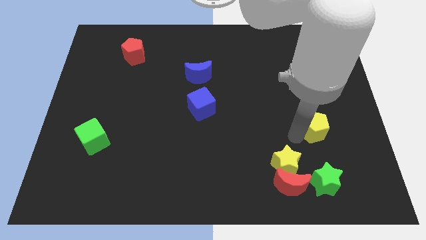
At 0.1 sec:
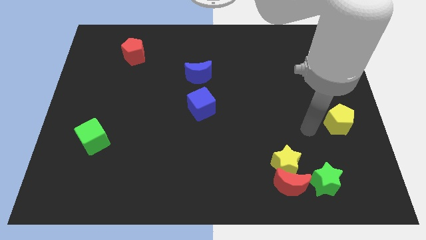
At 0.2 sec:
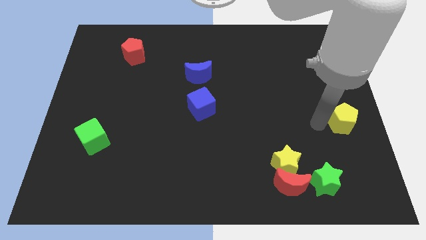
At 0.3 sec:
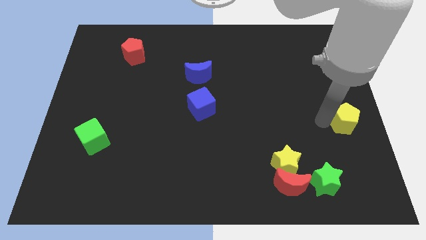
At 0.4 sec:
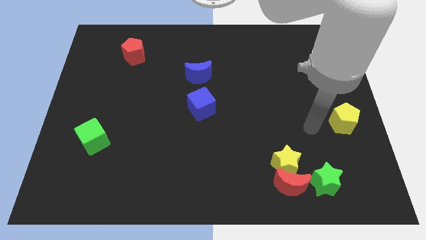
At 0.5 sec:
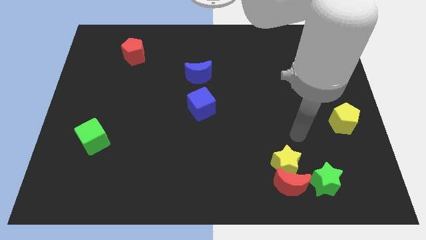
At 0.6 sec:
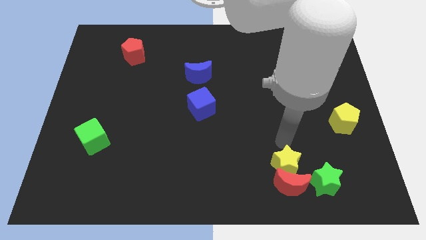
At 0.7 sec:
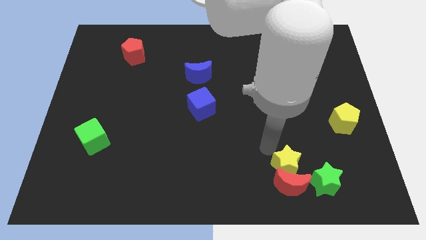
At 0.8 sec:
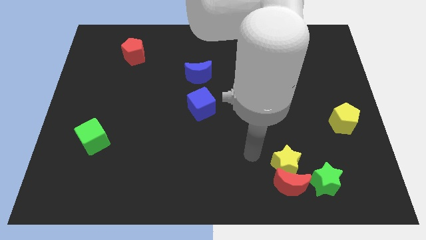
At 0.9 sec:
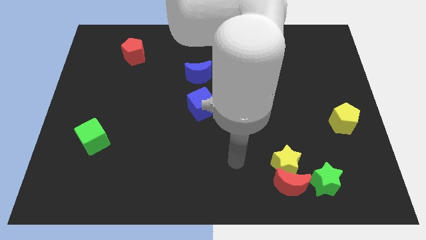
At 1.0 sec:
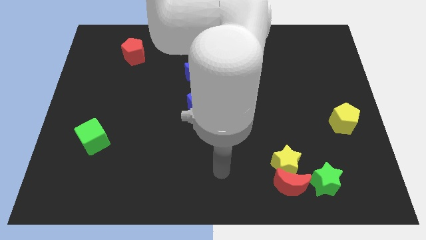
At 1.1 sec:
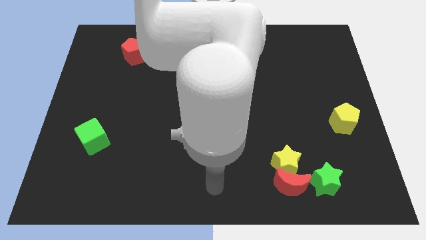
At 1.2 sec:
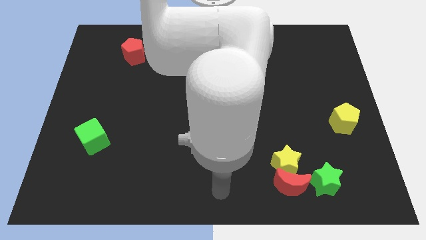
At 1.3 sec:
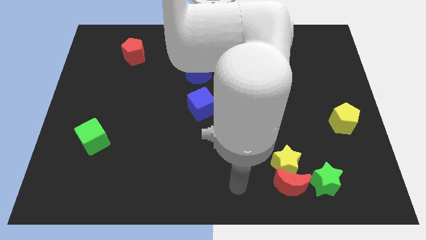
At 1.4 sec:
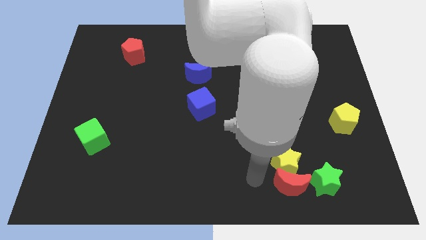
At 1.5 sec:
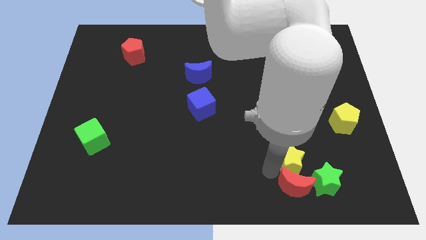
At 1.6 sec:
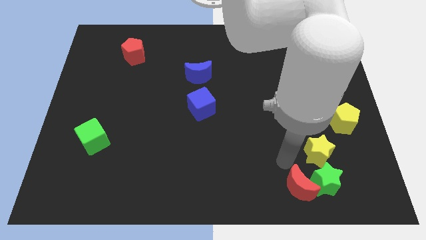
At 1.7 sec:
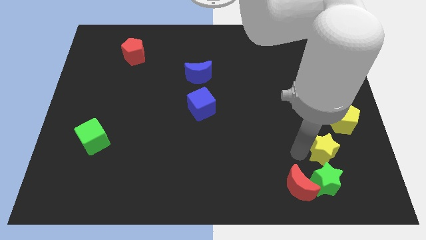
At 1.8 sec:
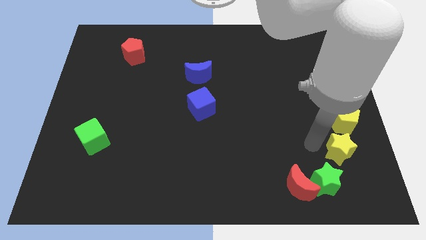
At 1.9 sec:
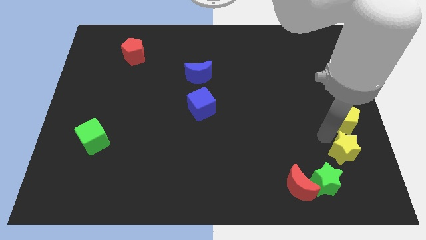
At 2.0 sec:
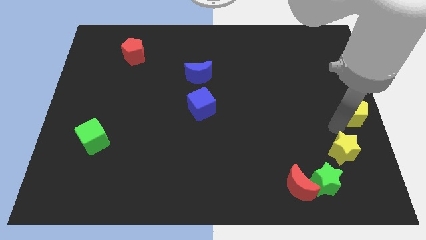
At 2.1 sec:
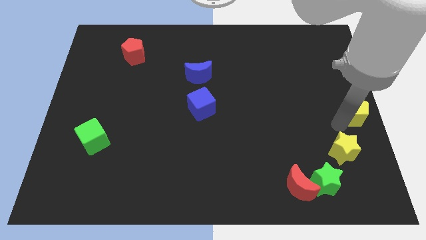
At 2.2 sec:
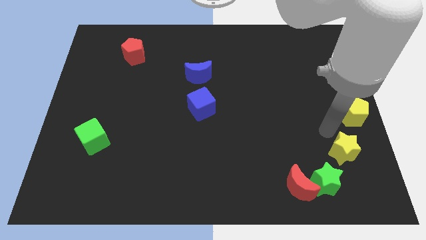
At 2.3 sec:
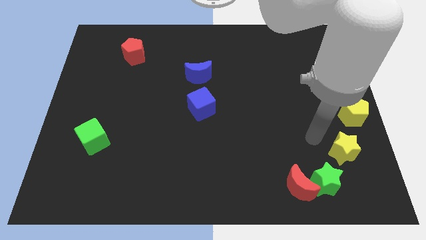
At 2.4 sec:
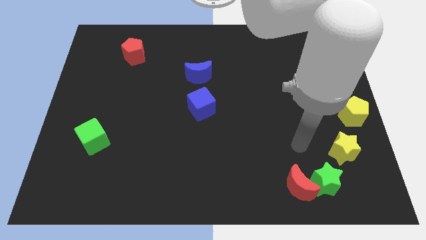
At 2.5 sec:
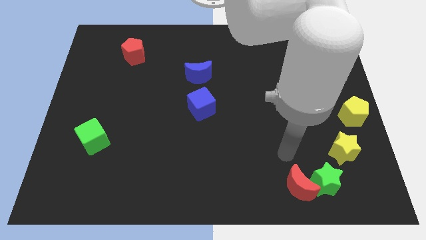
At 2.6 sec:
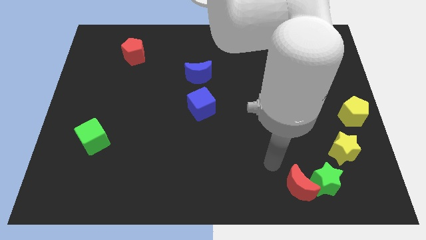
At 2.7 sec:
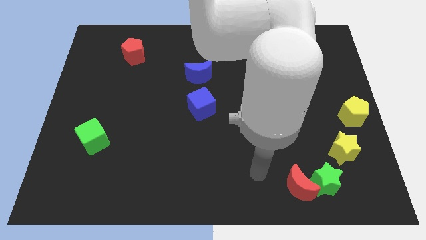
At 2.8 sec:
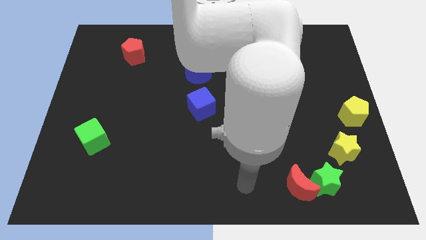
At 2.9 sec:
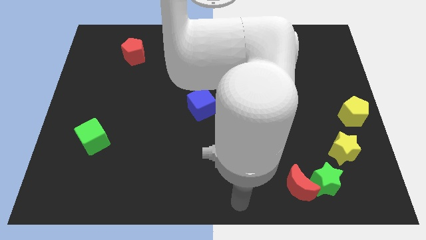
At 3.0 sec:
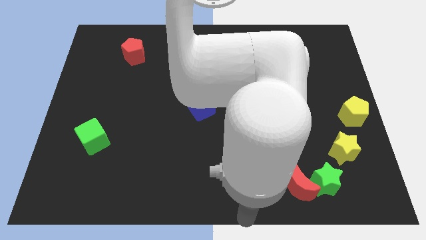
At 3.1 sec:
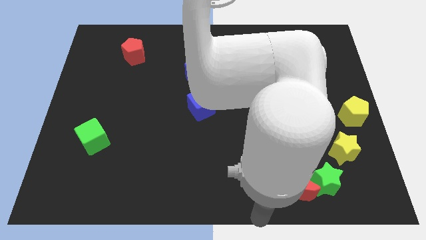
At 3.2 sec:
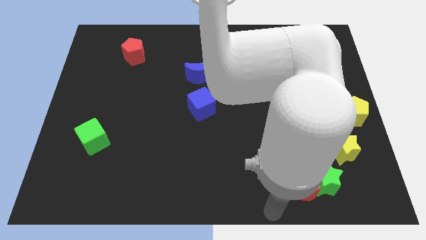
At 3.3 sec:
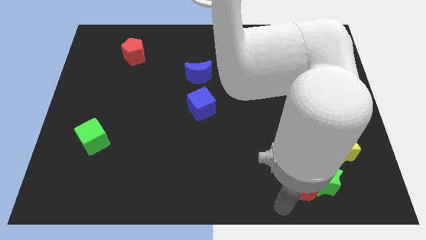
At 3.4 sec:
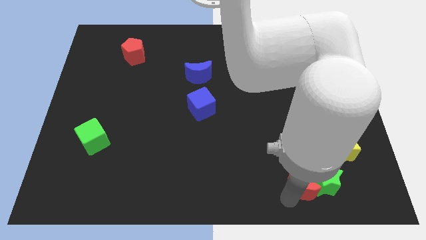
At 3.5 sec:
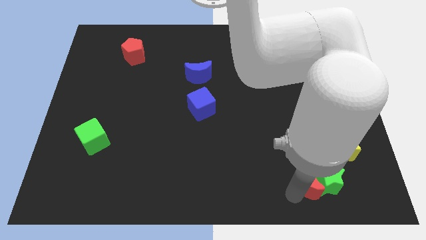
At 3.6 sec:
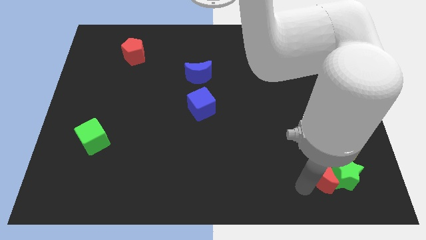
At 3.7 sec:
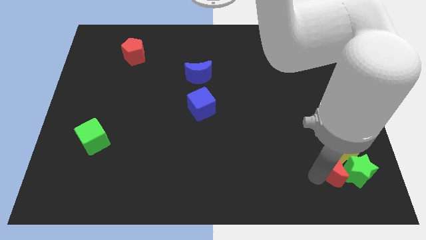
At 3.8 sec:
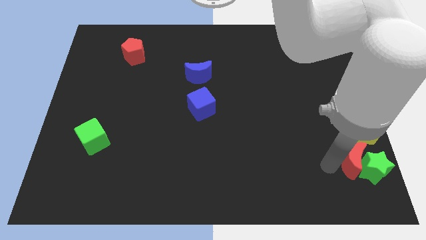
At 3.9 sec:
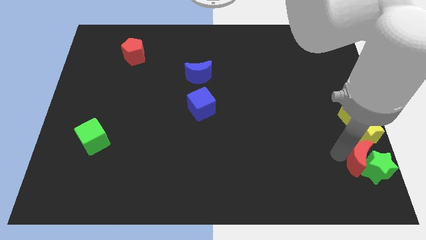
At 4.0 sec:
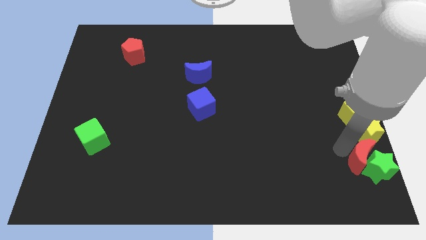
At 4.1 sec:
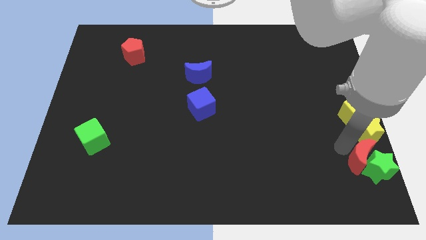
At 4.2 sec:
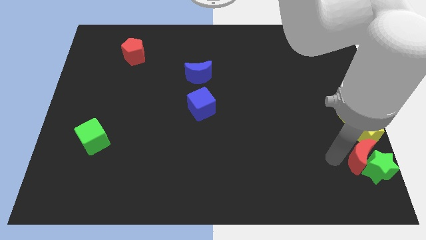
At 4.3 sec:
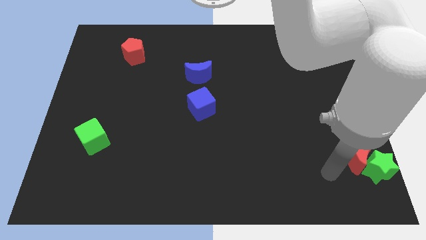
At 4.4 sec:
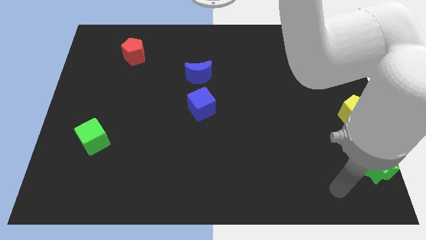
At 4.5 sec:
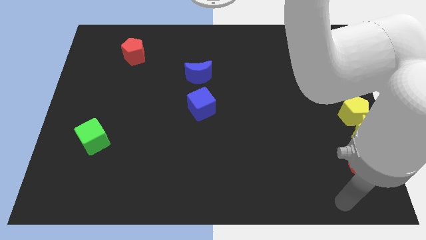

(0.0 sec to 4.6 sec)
drag the yellow pentagon towards the right

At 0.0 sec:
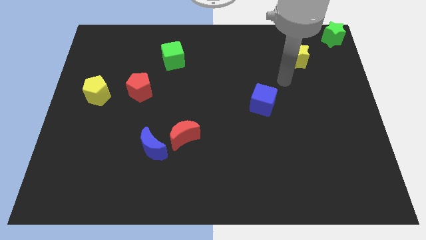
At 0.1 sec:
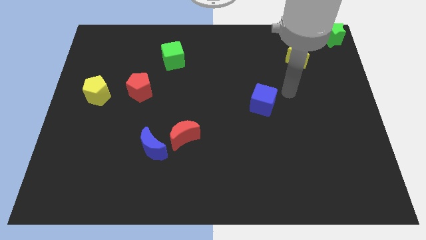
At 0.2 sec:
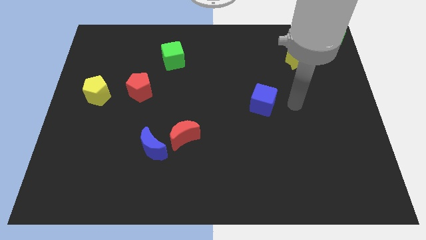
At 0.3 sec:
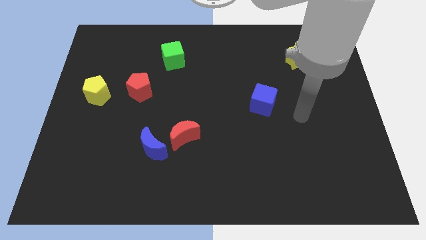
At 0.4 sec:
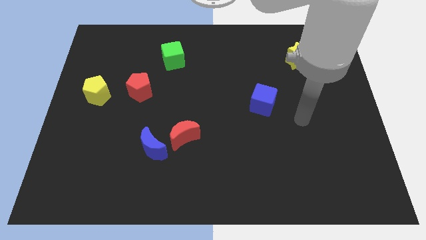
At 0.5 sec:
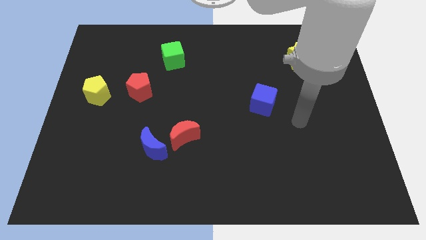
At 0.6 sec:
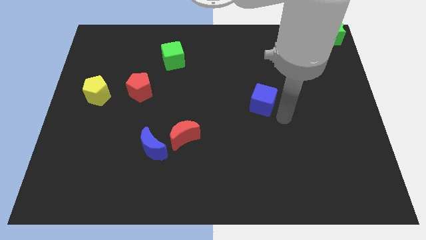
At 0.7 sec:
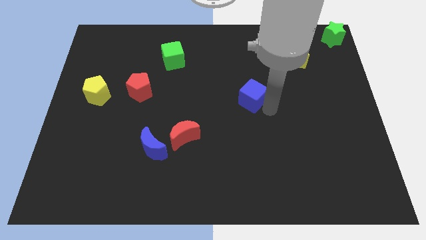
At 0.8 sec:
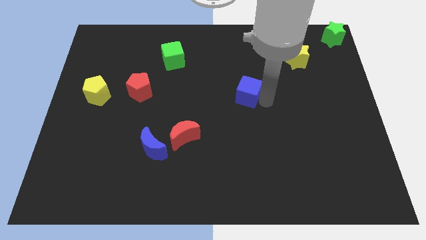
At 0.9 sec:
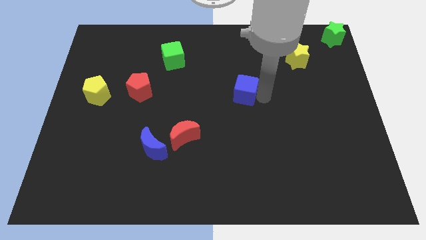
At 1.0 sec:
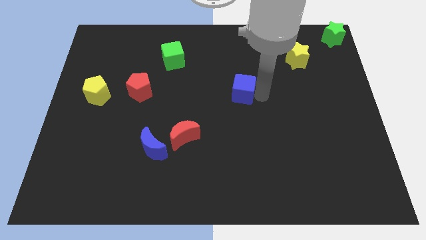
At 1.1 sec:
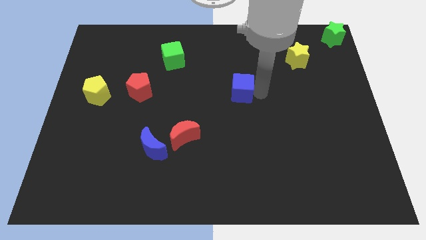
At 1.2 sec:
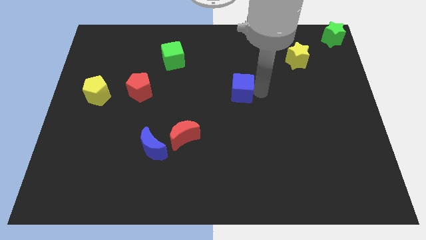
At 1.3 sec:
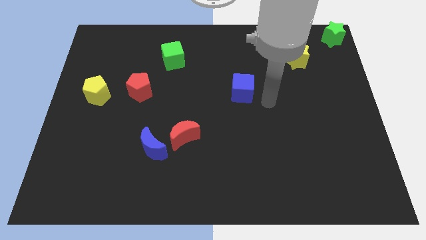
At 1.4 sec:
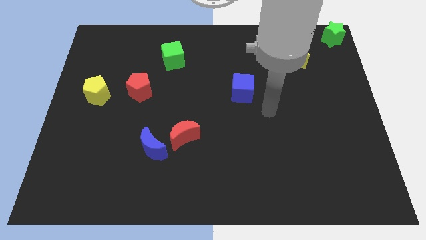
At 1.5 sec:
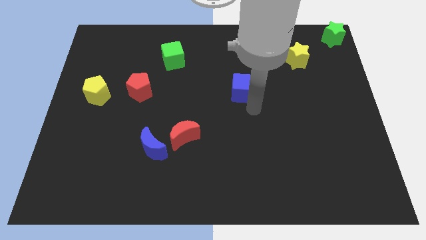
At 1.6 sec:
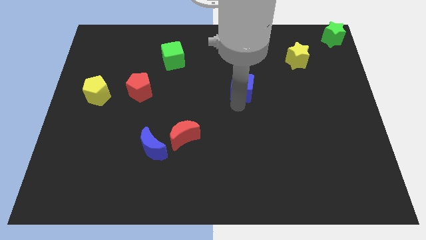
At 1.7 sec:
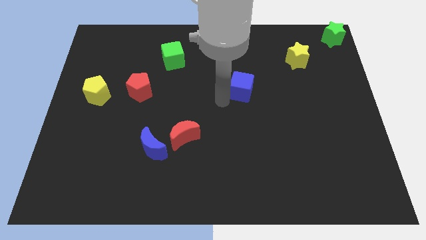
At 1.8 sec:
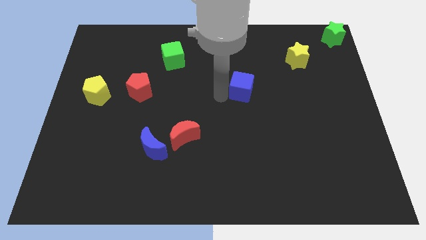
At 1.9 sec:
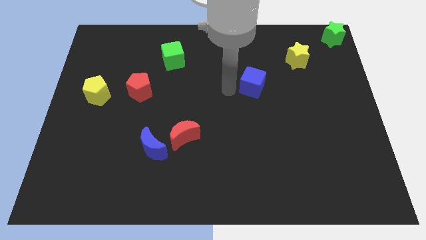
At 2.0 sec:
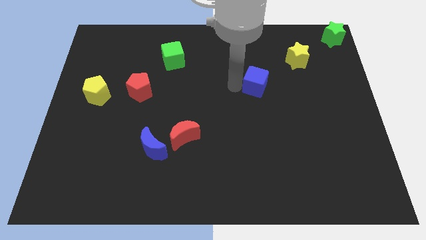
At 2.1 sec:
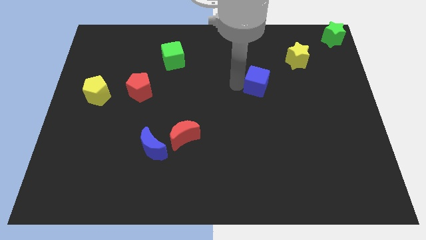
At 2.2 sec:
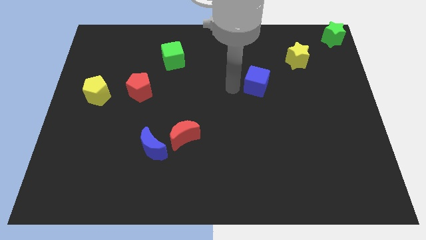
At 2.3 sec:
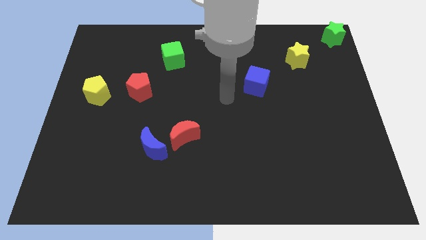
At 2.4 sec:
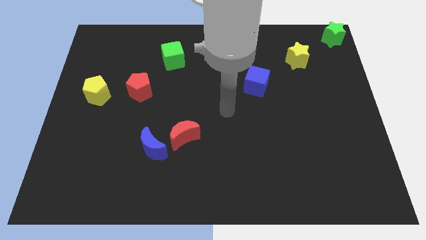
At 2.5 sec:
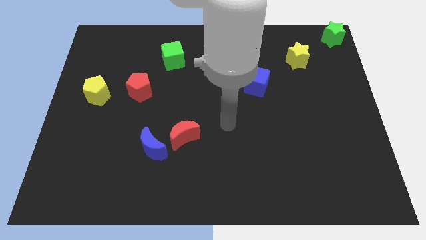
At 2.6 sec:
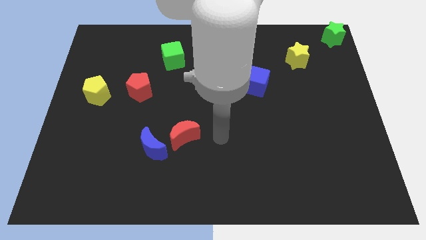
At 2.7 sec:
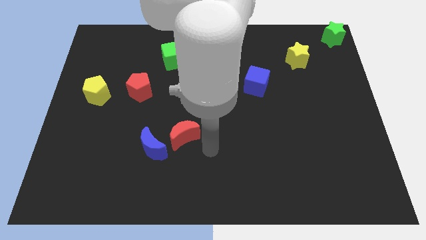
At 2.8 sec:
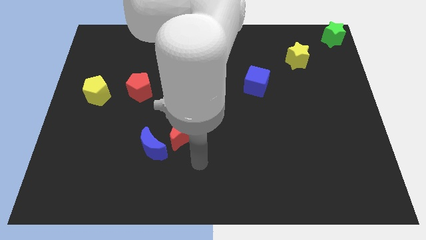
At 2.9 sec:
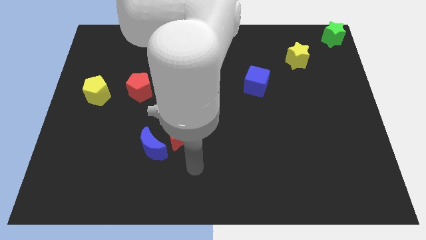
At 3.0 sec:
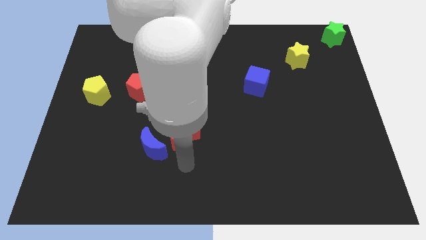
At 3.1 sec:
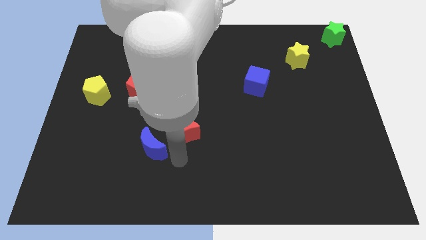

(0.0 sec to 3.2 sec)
place the blue cube parallel right to the red pentagon

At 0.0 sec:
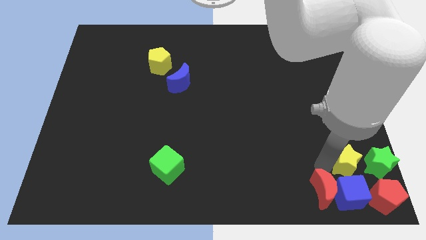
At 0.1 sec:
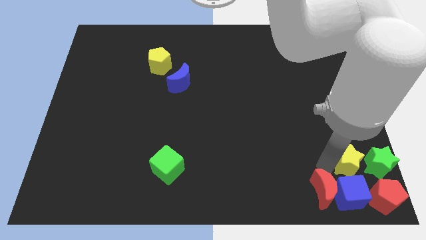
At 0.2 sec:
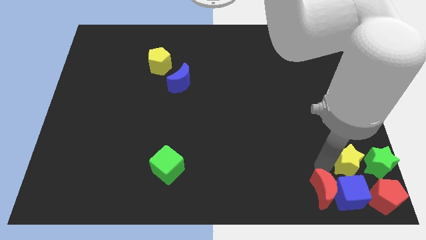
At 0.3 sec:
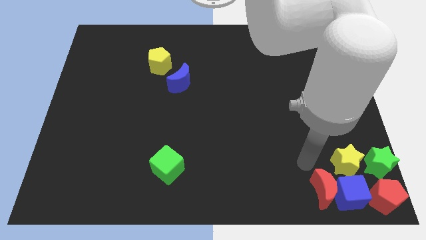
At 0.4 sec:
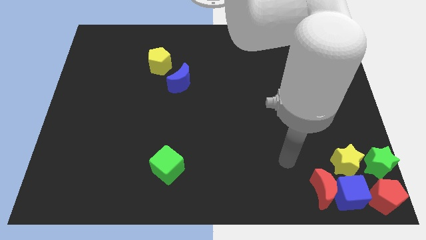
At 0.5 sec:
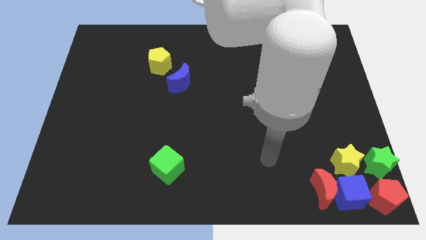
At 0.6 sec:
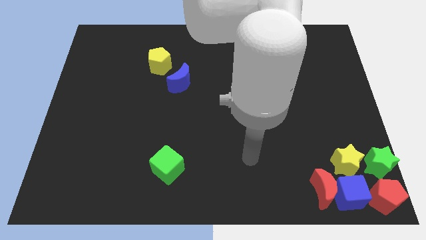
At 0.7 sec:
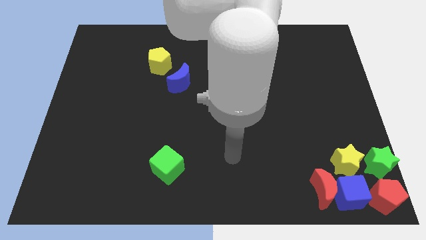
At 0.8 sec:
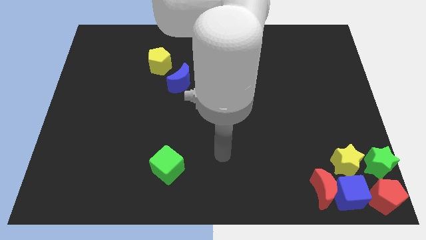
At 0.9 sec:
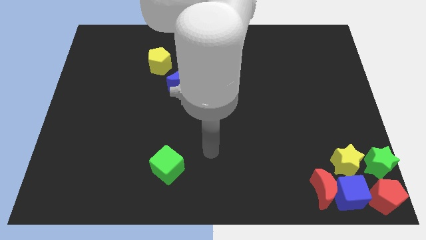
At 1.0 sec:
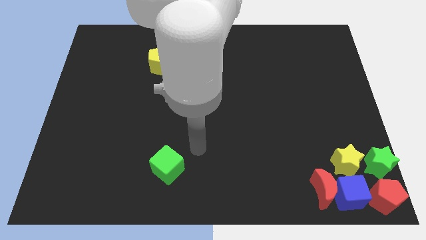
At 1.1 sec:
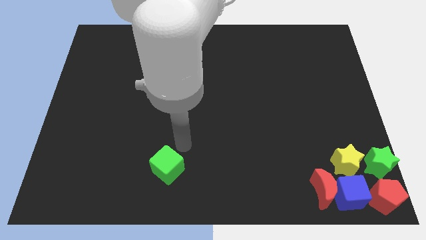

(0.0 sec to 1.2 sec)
move the arm away from the yellow star
